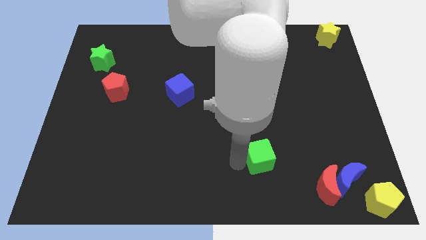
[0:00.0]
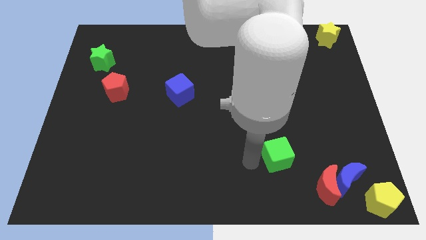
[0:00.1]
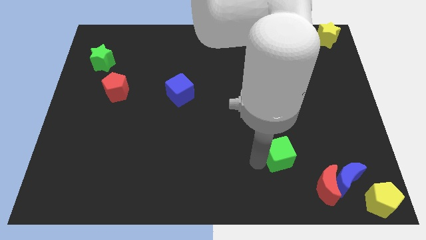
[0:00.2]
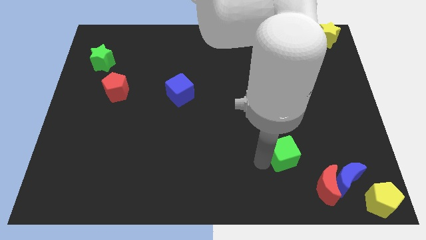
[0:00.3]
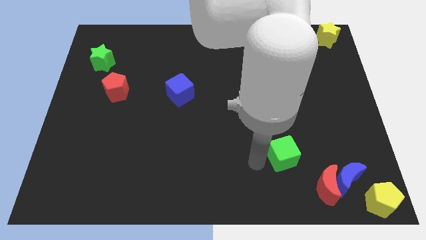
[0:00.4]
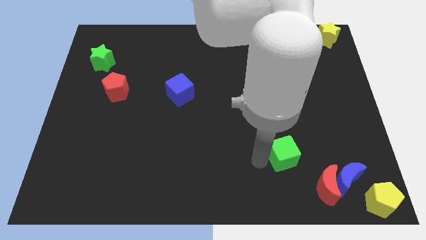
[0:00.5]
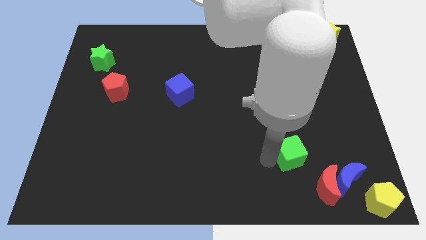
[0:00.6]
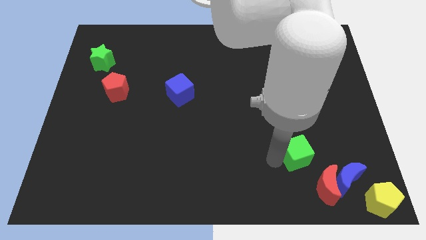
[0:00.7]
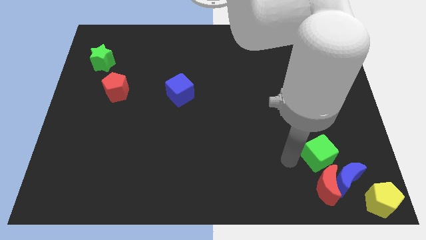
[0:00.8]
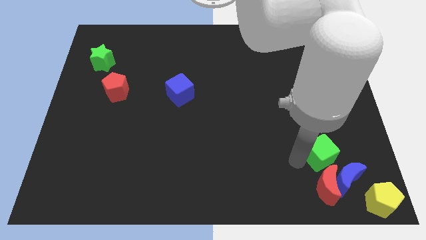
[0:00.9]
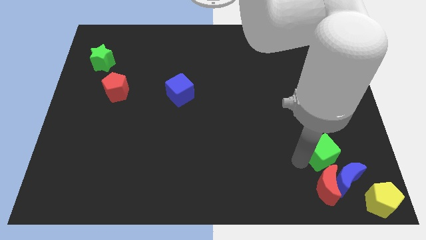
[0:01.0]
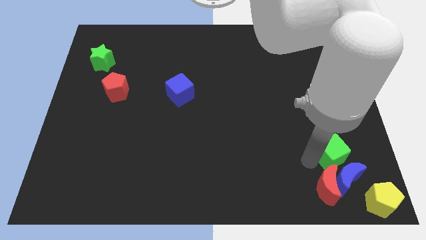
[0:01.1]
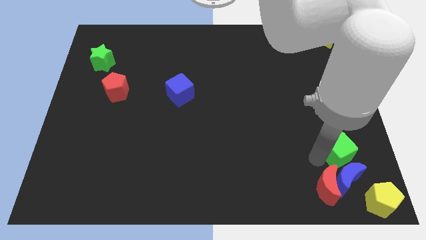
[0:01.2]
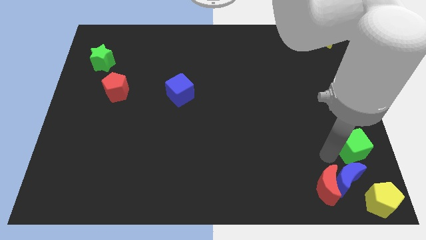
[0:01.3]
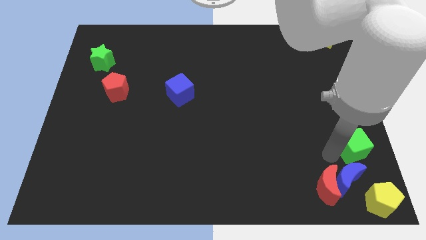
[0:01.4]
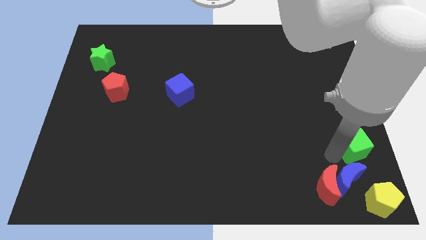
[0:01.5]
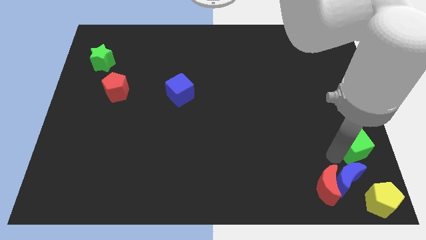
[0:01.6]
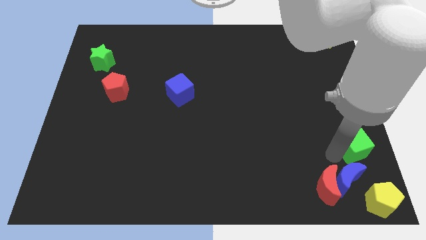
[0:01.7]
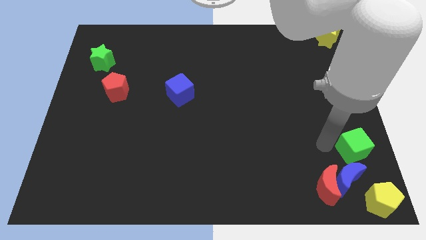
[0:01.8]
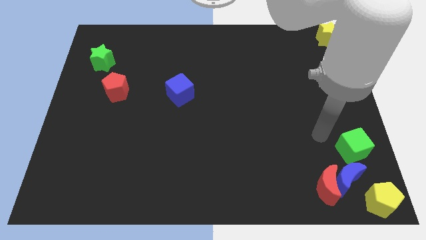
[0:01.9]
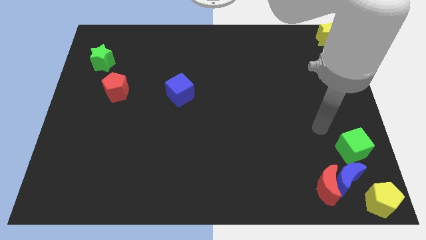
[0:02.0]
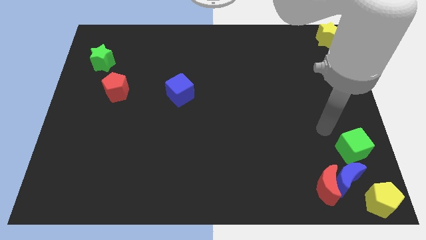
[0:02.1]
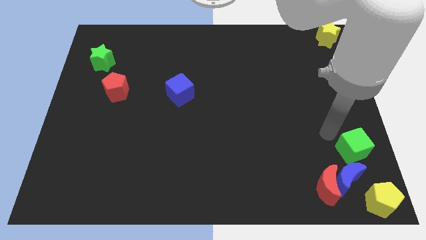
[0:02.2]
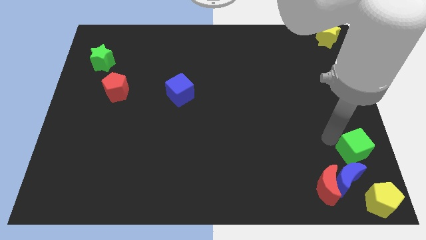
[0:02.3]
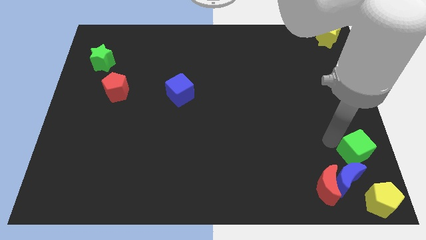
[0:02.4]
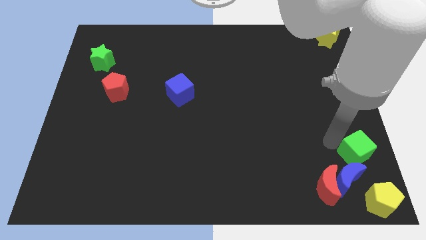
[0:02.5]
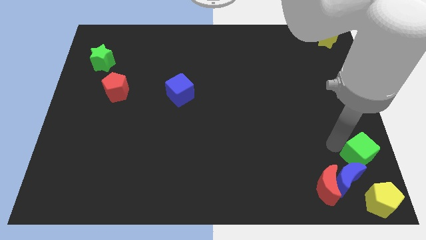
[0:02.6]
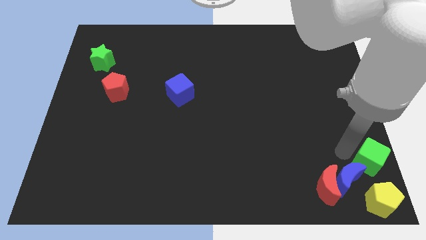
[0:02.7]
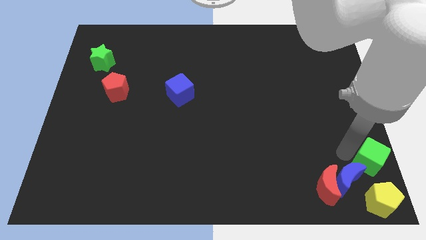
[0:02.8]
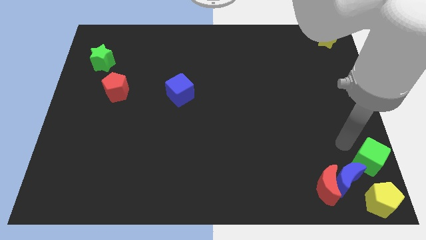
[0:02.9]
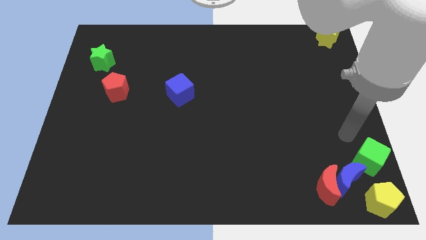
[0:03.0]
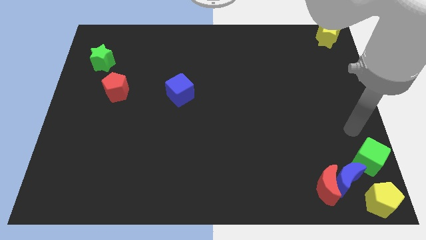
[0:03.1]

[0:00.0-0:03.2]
move the green cube diagonally above the blue moon

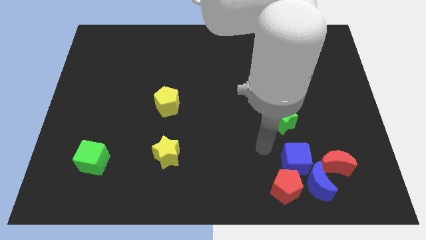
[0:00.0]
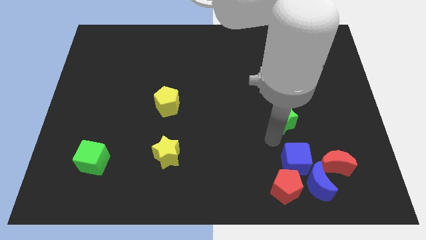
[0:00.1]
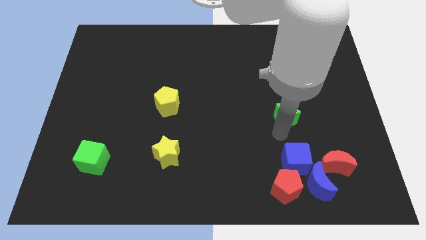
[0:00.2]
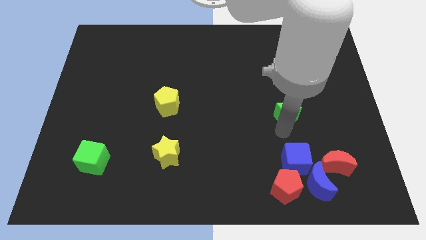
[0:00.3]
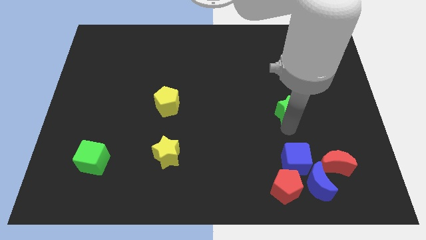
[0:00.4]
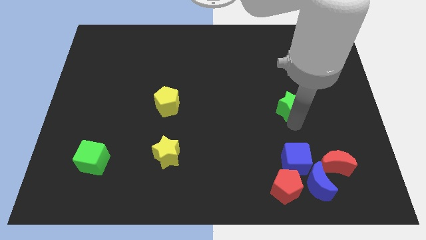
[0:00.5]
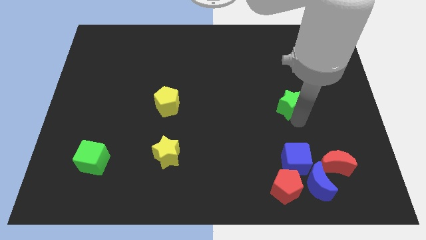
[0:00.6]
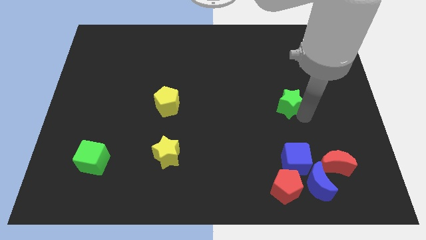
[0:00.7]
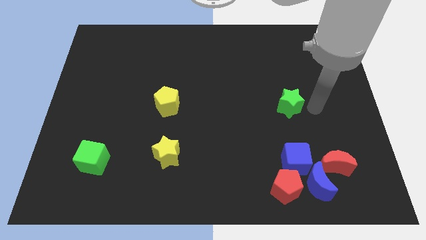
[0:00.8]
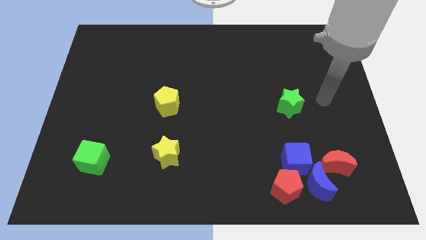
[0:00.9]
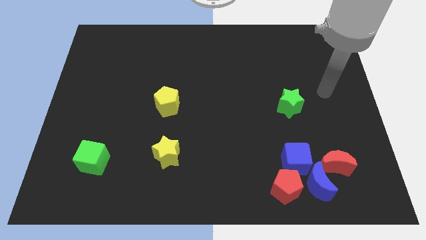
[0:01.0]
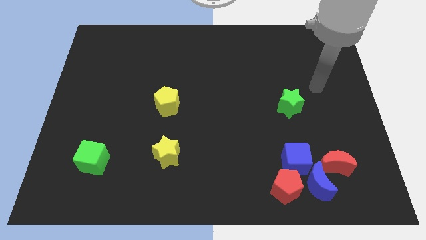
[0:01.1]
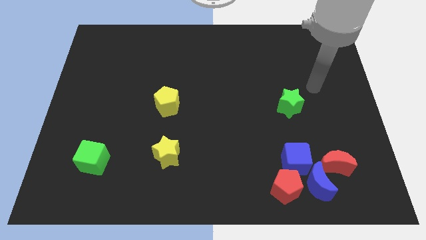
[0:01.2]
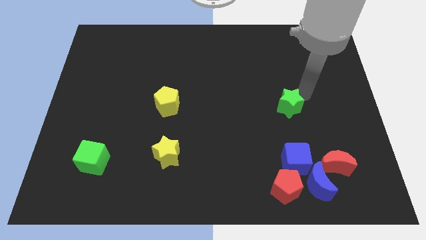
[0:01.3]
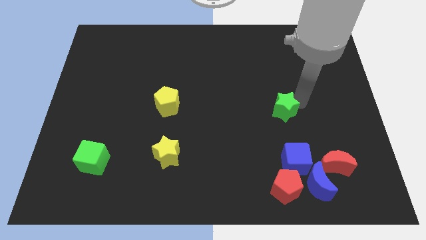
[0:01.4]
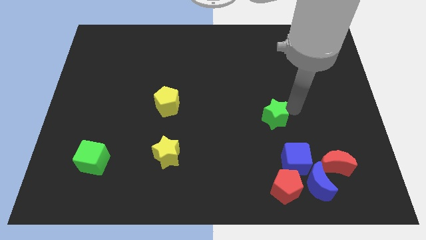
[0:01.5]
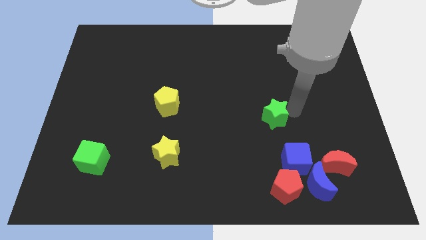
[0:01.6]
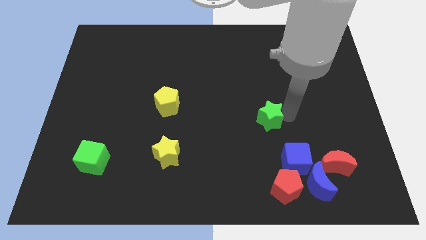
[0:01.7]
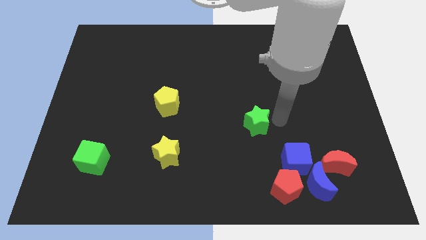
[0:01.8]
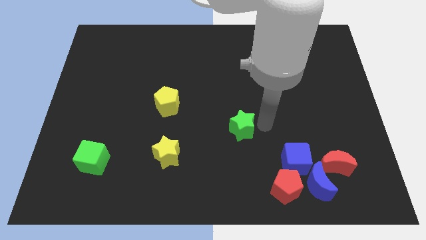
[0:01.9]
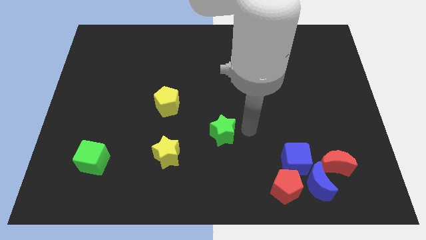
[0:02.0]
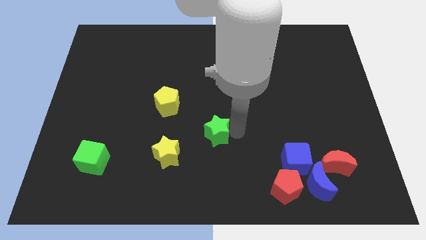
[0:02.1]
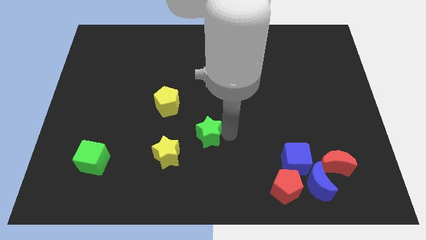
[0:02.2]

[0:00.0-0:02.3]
push the green star towards the yellow star

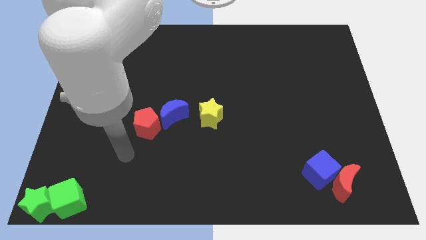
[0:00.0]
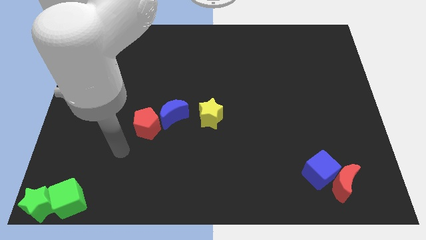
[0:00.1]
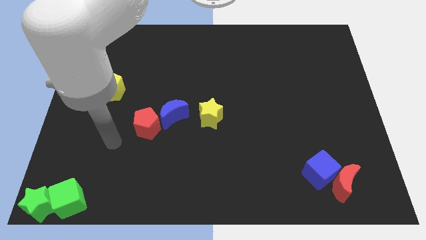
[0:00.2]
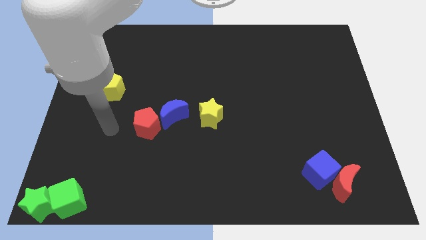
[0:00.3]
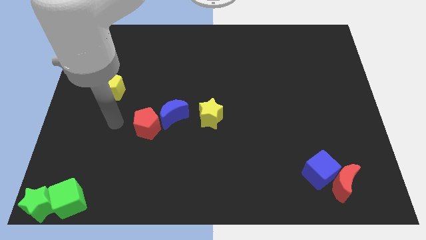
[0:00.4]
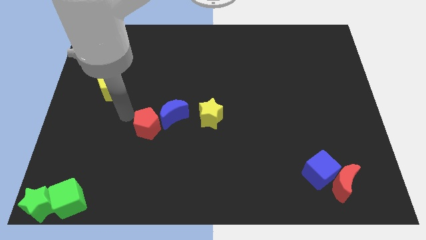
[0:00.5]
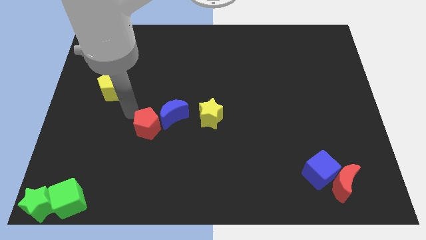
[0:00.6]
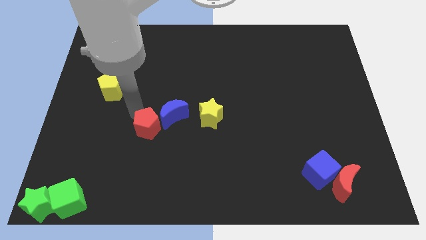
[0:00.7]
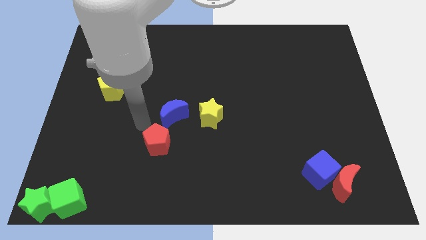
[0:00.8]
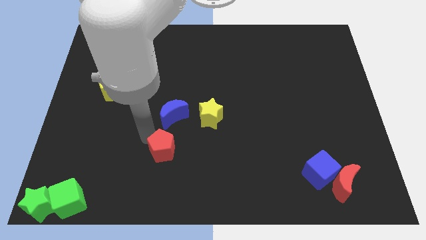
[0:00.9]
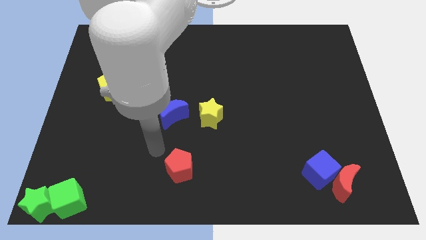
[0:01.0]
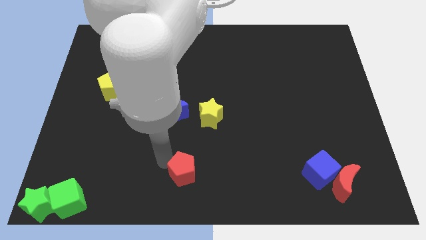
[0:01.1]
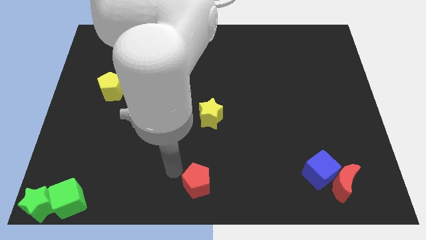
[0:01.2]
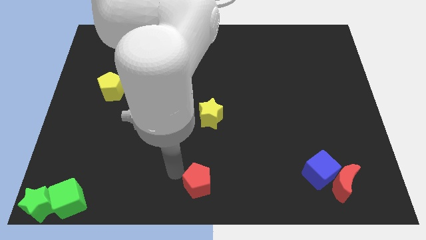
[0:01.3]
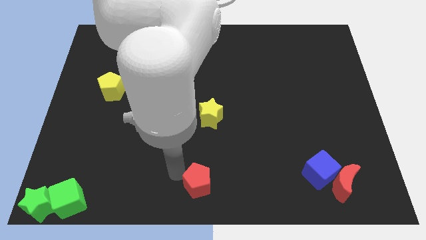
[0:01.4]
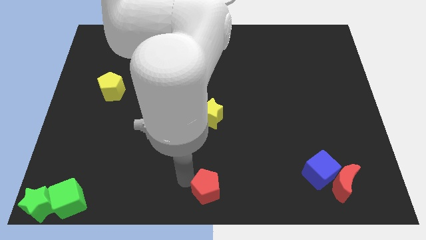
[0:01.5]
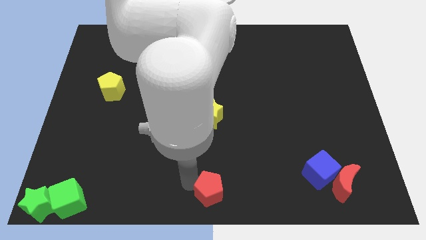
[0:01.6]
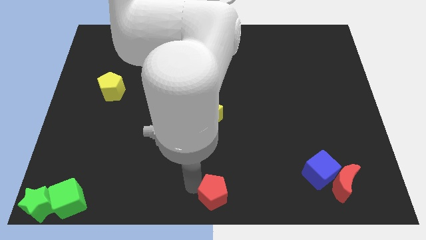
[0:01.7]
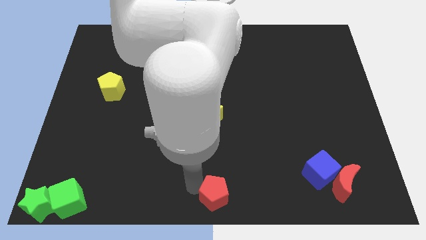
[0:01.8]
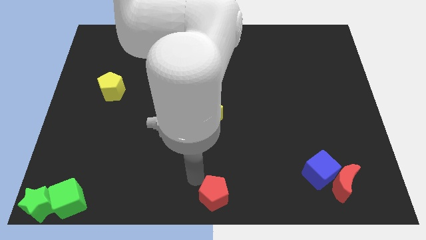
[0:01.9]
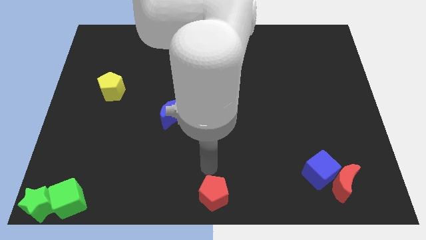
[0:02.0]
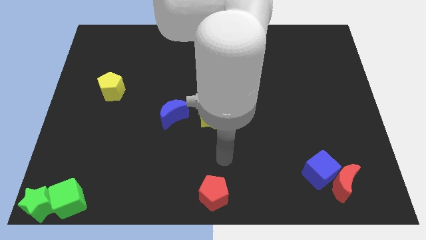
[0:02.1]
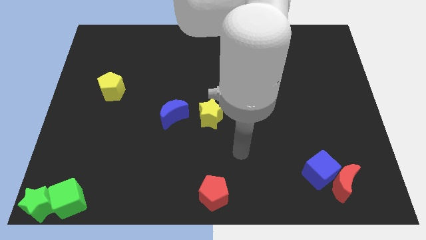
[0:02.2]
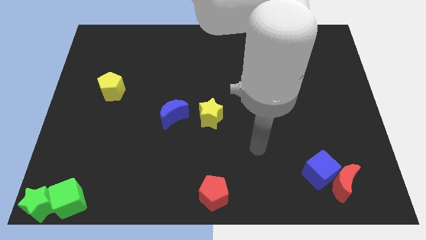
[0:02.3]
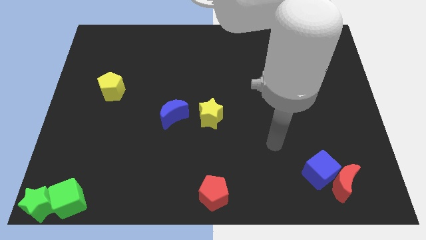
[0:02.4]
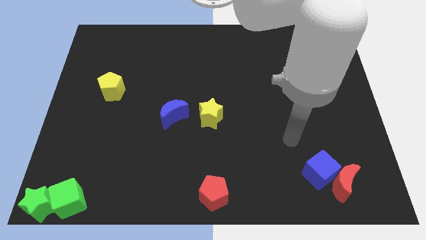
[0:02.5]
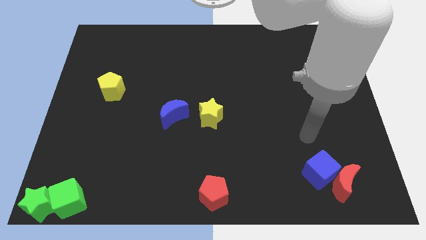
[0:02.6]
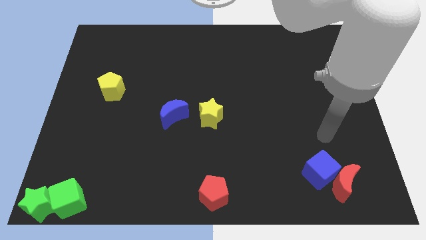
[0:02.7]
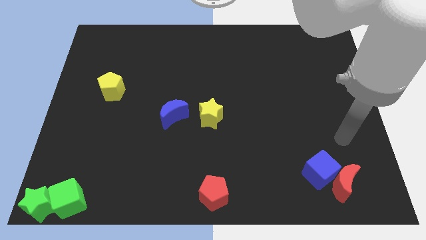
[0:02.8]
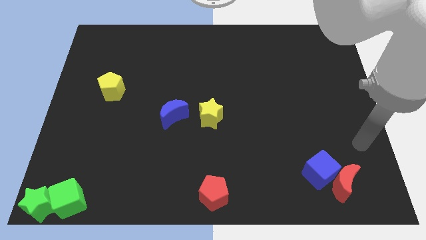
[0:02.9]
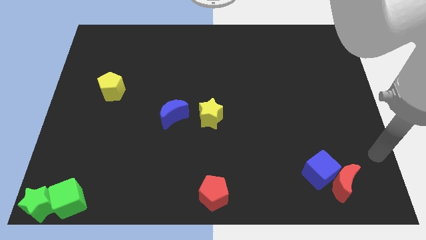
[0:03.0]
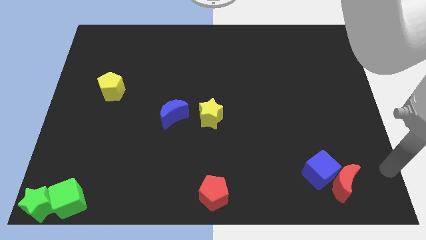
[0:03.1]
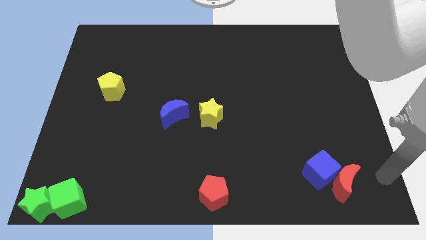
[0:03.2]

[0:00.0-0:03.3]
put the red pentagon at the bottom center of the board

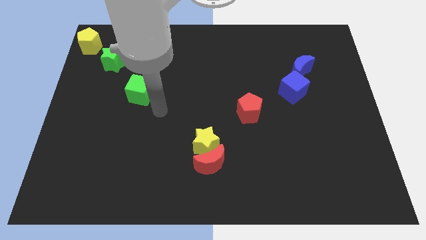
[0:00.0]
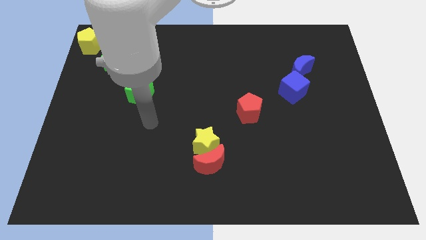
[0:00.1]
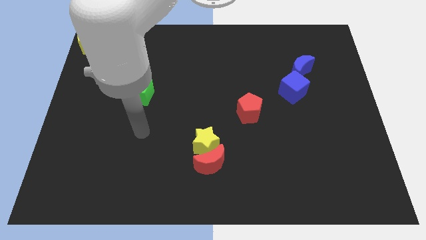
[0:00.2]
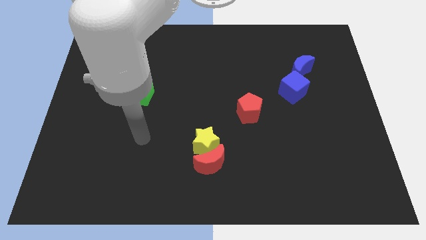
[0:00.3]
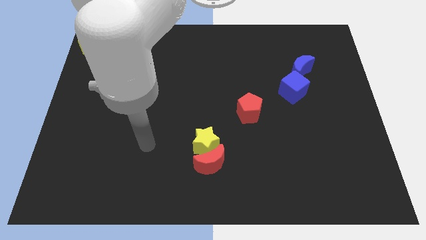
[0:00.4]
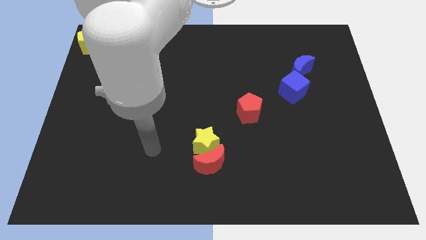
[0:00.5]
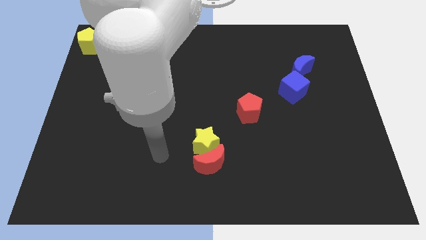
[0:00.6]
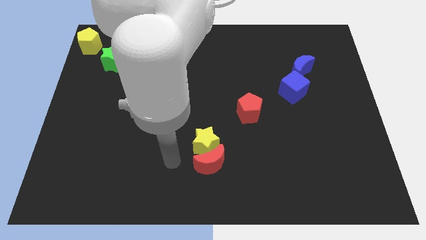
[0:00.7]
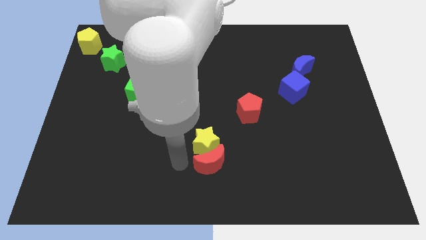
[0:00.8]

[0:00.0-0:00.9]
point your arm to the left side of red moon
